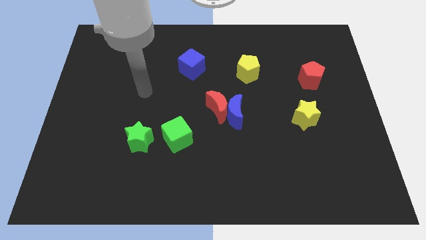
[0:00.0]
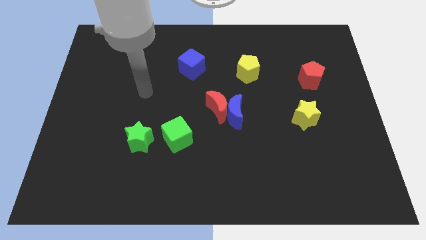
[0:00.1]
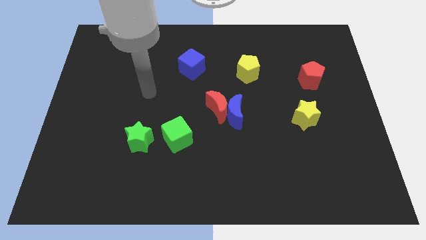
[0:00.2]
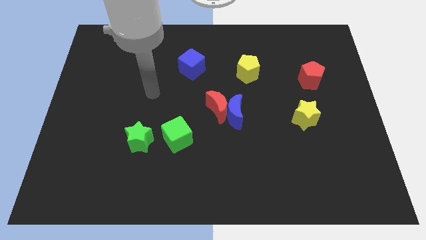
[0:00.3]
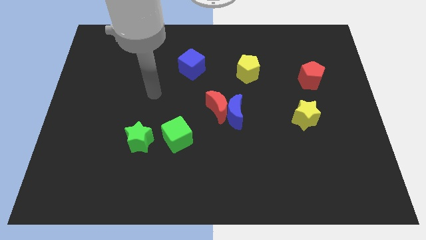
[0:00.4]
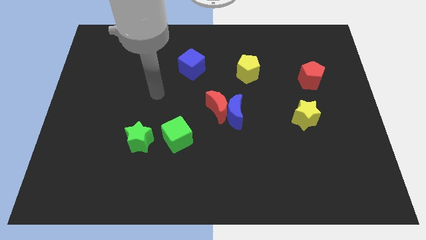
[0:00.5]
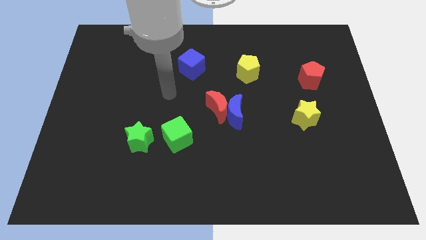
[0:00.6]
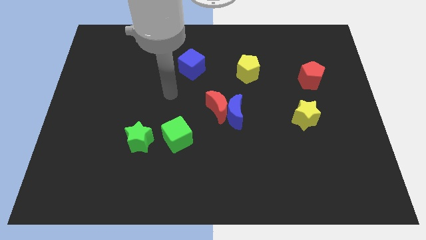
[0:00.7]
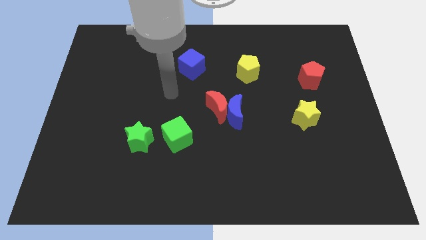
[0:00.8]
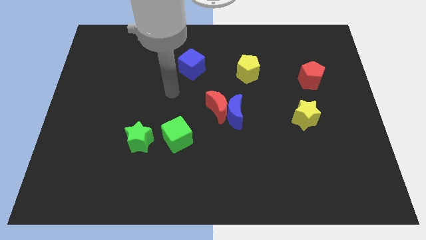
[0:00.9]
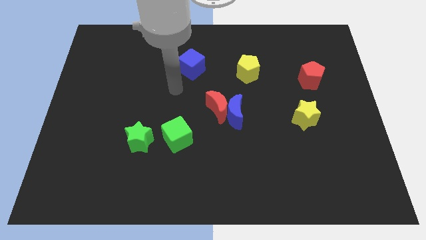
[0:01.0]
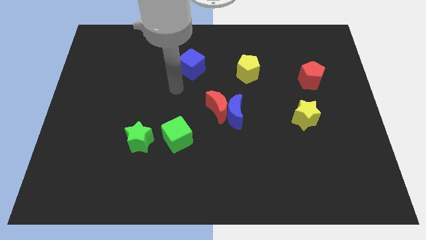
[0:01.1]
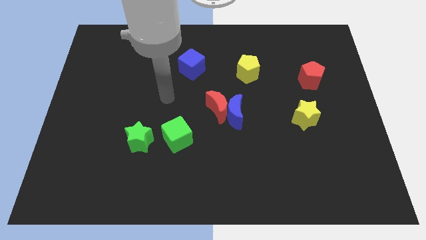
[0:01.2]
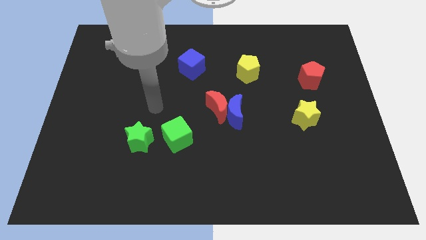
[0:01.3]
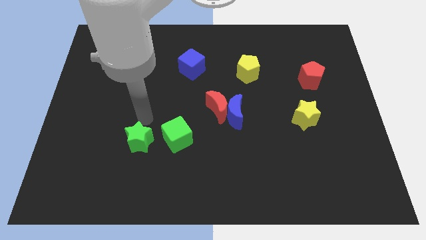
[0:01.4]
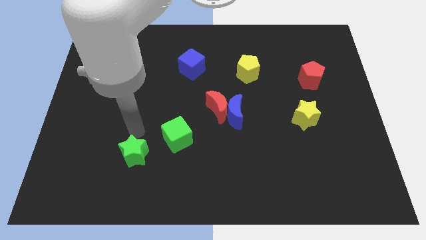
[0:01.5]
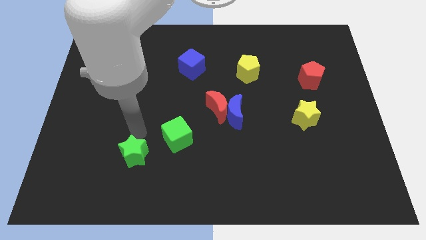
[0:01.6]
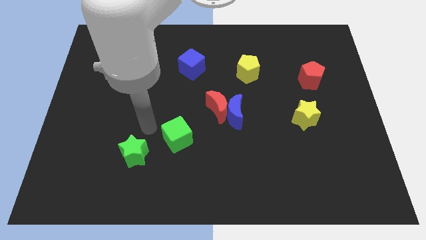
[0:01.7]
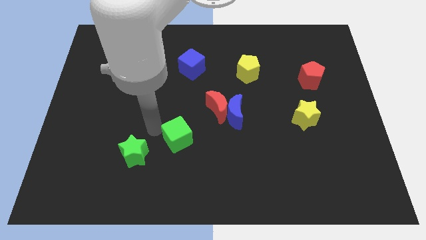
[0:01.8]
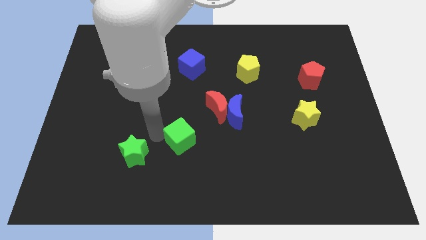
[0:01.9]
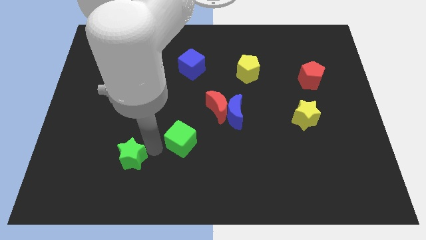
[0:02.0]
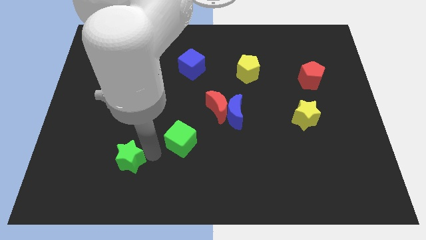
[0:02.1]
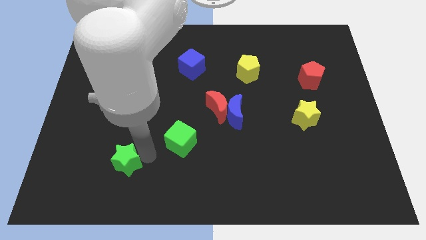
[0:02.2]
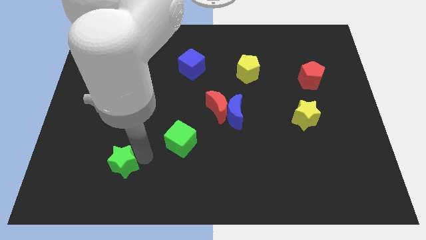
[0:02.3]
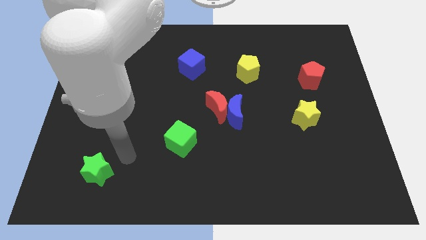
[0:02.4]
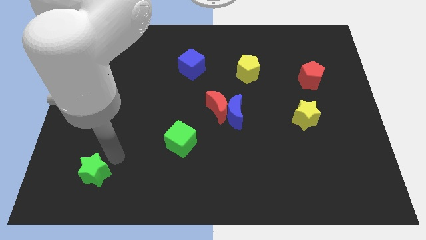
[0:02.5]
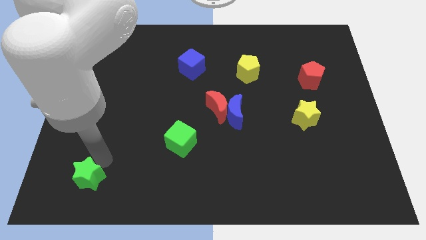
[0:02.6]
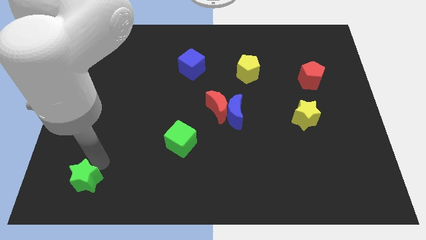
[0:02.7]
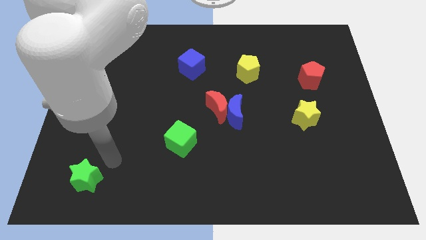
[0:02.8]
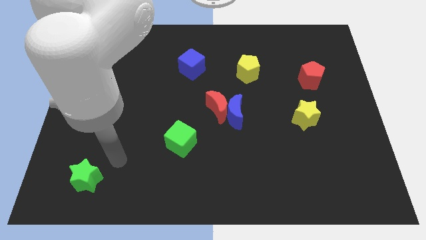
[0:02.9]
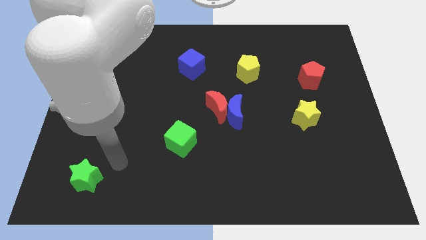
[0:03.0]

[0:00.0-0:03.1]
slightly push the green star towards the left side of the board

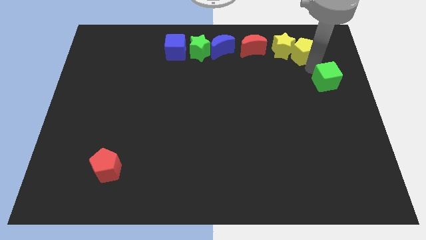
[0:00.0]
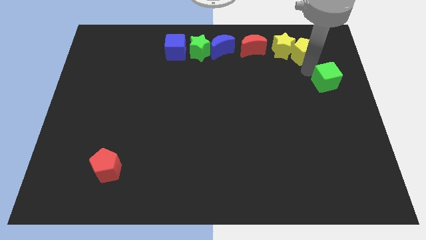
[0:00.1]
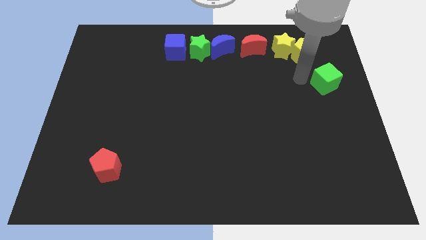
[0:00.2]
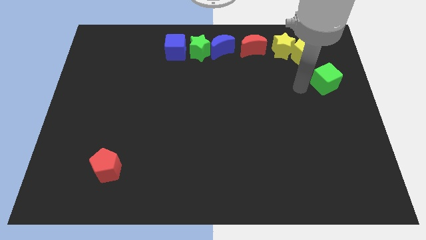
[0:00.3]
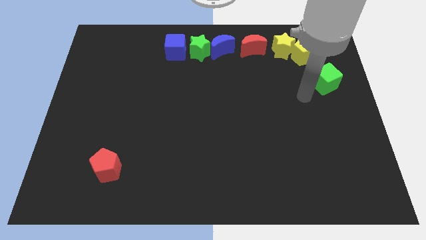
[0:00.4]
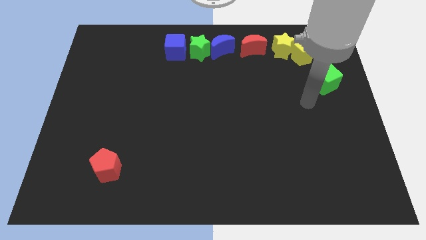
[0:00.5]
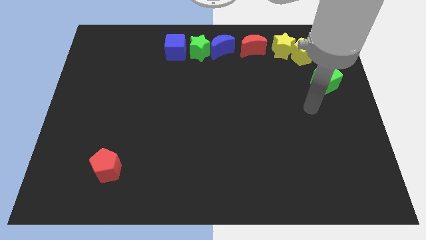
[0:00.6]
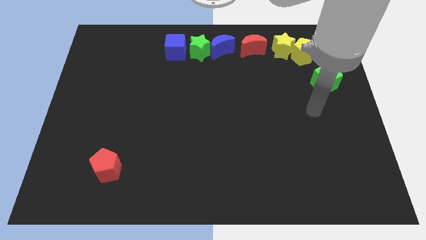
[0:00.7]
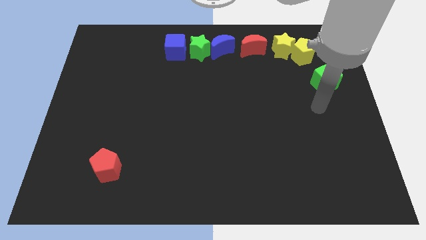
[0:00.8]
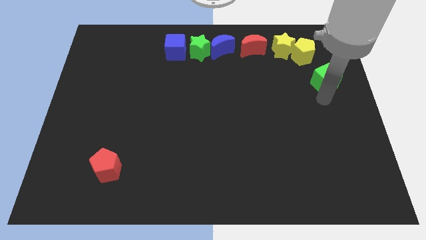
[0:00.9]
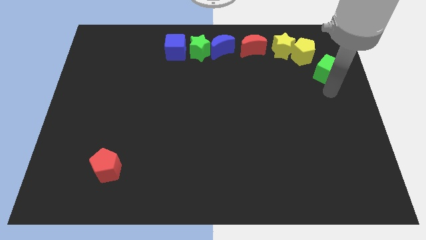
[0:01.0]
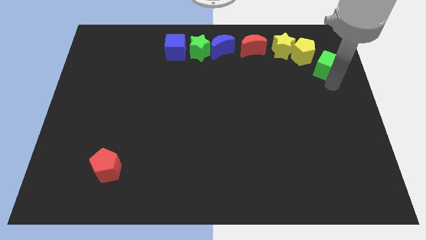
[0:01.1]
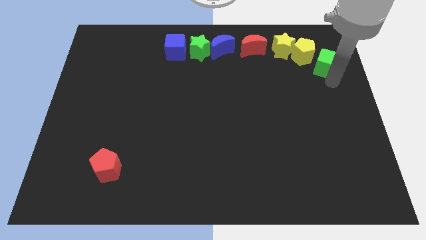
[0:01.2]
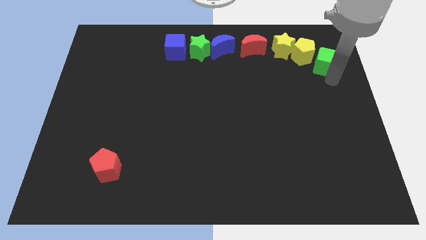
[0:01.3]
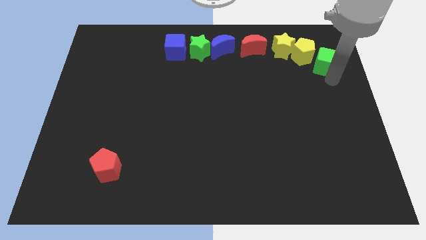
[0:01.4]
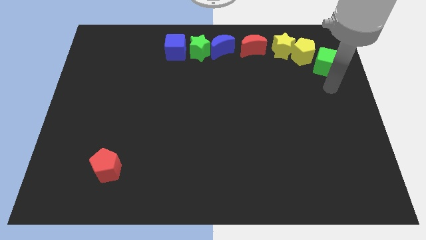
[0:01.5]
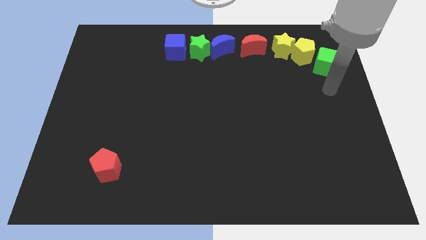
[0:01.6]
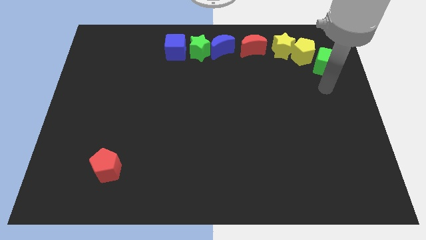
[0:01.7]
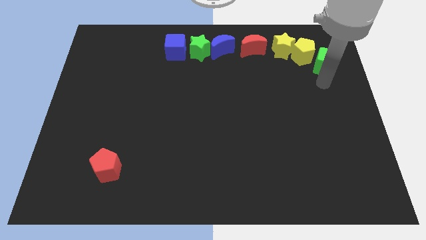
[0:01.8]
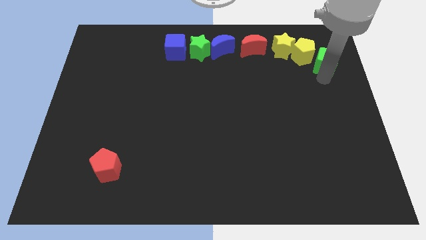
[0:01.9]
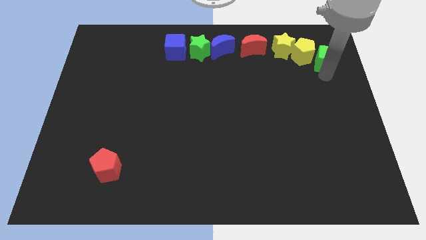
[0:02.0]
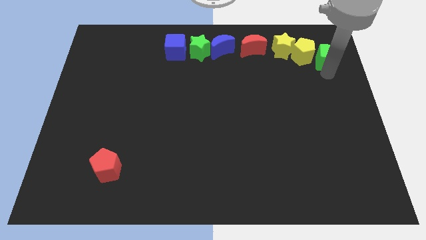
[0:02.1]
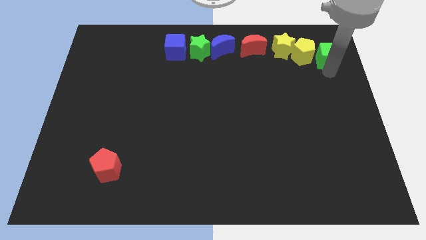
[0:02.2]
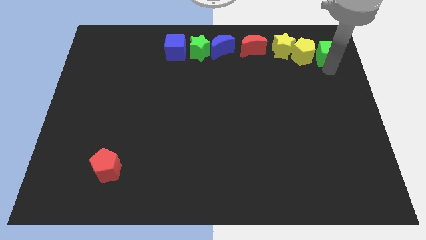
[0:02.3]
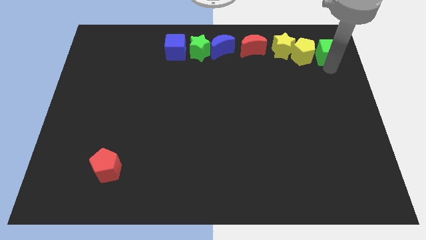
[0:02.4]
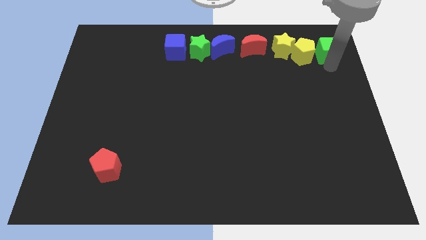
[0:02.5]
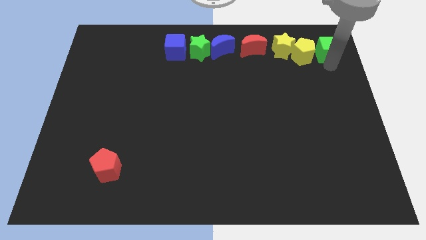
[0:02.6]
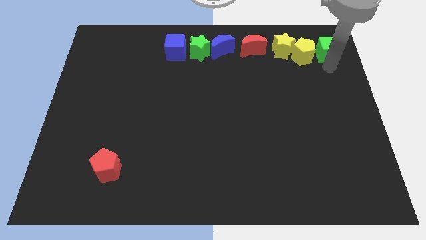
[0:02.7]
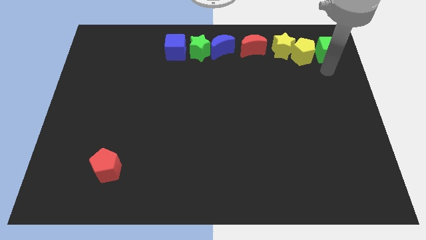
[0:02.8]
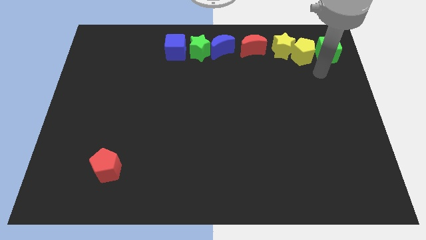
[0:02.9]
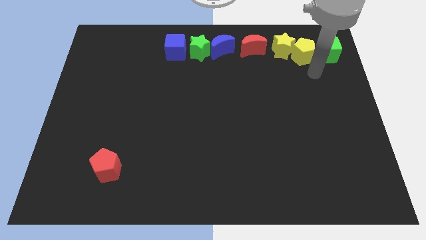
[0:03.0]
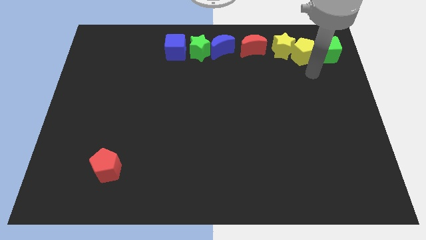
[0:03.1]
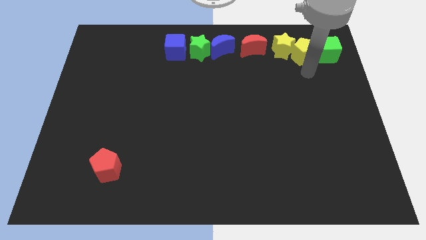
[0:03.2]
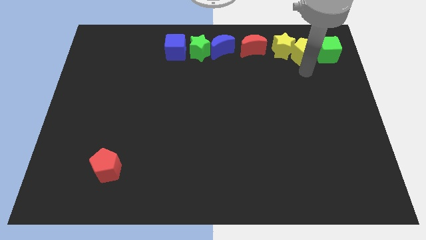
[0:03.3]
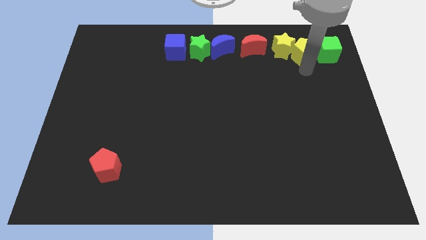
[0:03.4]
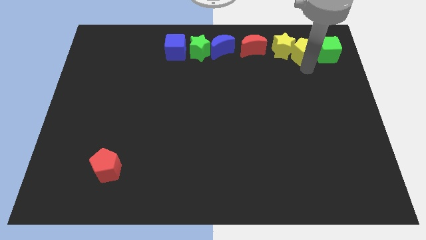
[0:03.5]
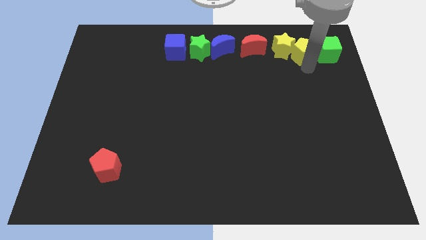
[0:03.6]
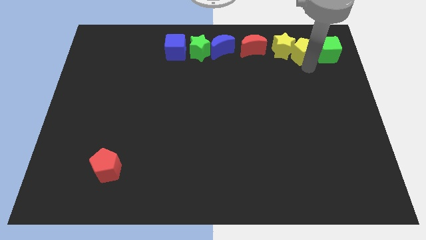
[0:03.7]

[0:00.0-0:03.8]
push green cube to top right corner of the board

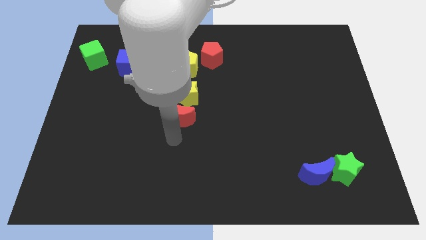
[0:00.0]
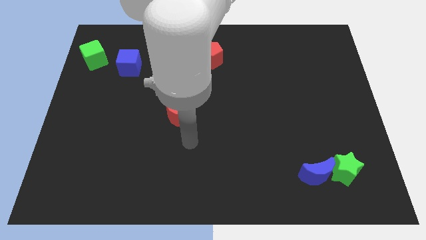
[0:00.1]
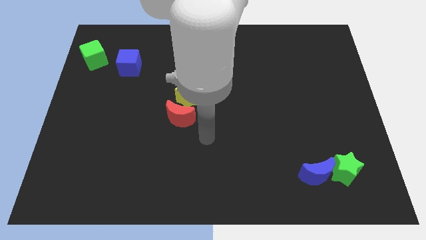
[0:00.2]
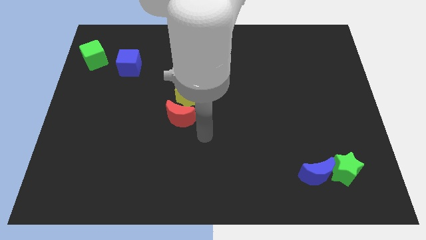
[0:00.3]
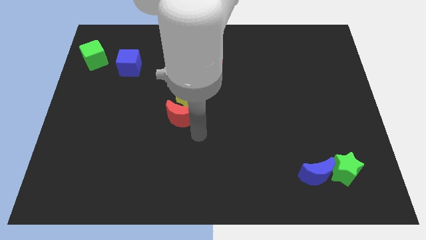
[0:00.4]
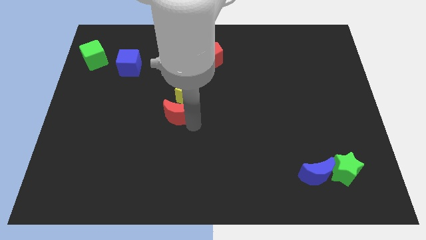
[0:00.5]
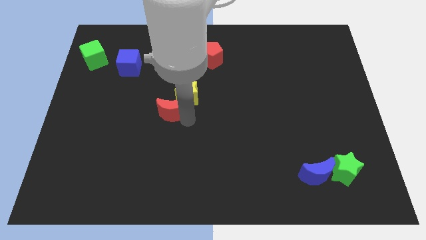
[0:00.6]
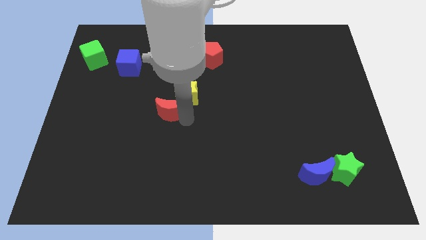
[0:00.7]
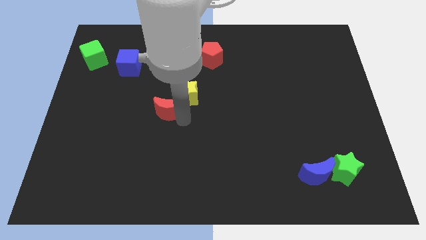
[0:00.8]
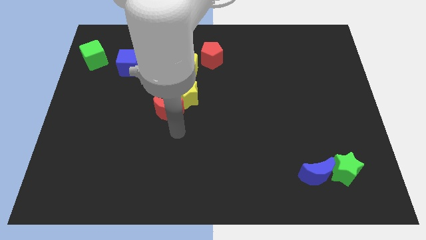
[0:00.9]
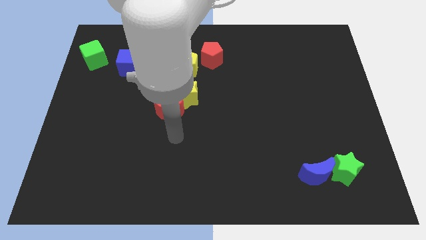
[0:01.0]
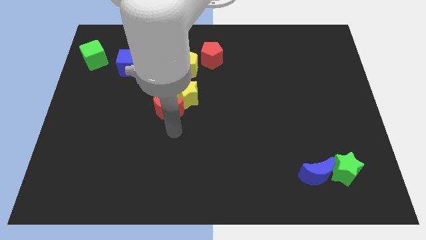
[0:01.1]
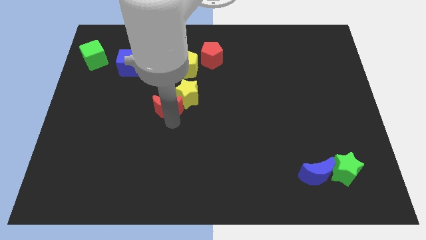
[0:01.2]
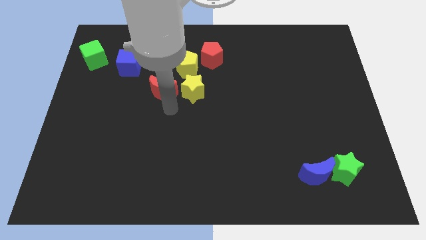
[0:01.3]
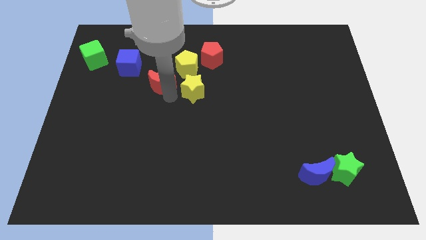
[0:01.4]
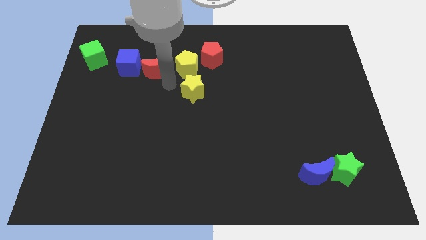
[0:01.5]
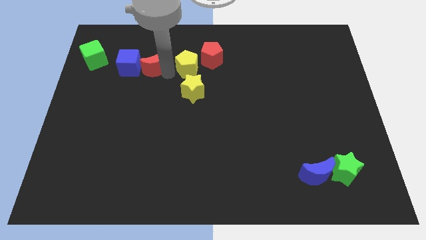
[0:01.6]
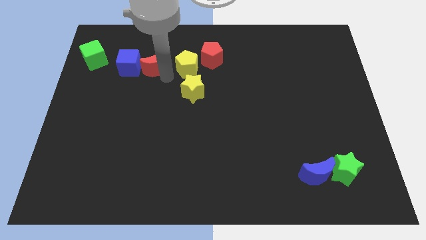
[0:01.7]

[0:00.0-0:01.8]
place the red moon in between yellow pentagon and blue cube

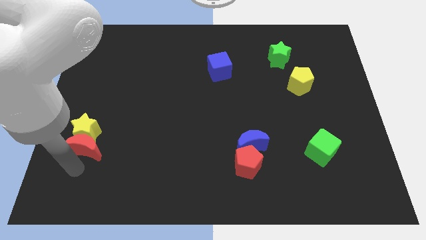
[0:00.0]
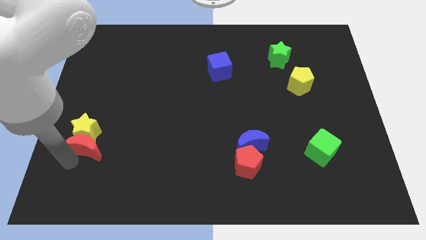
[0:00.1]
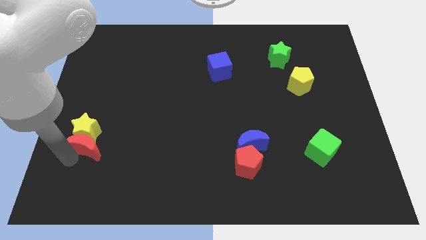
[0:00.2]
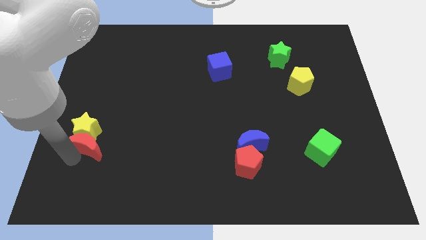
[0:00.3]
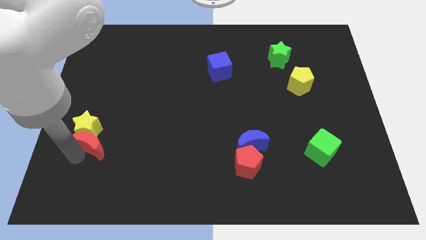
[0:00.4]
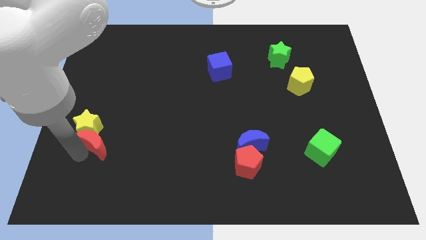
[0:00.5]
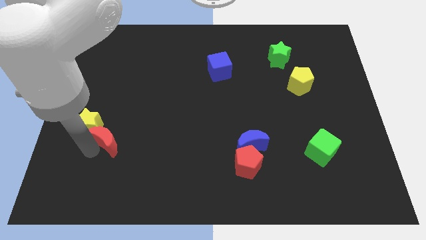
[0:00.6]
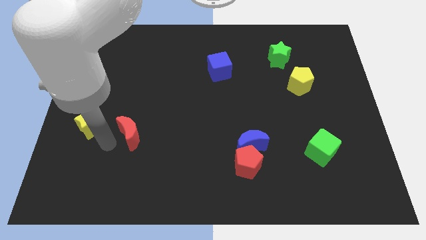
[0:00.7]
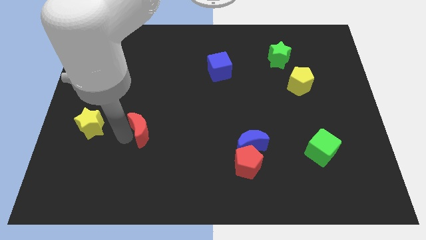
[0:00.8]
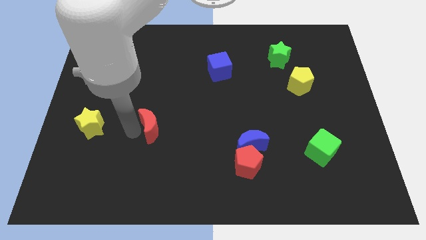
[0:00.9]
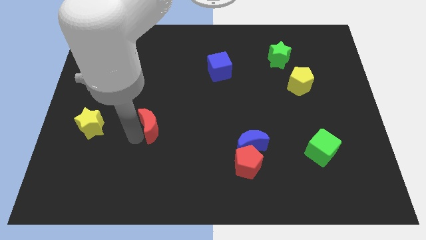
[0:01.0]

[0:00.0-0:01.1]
separate red crescent from yellow star
